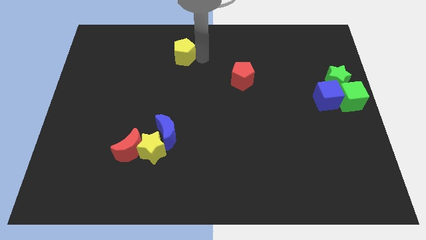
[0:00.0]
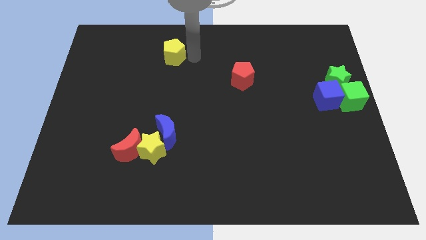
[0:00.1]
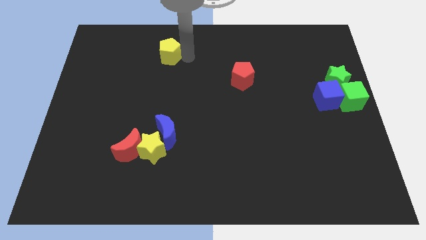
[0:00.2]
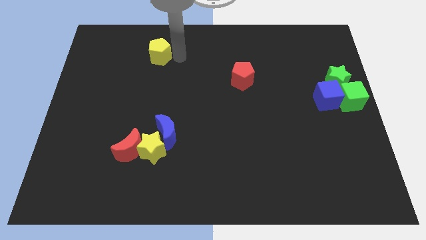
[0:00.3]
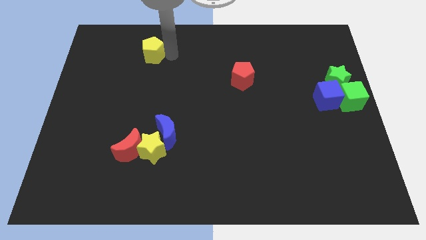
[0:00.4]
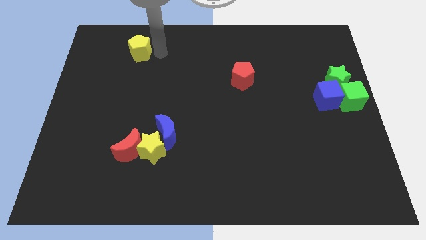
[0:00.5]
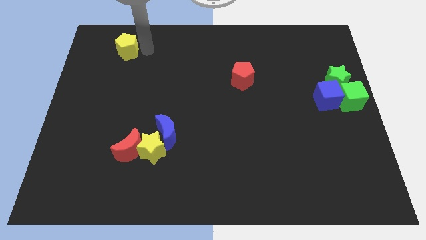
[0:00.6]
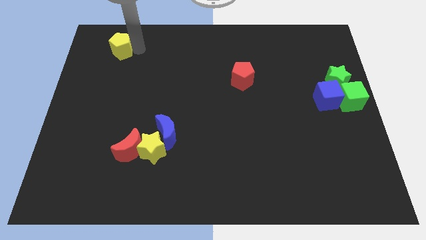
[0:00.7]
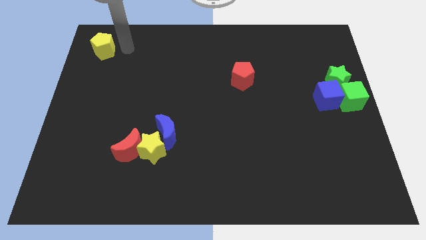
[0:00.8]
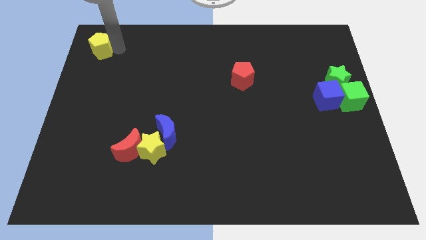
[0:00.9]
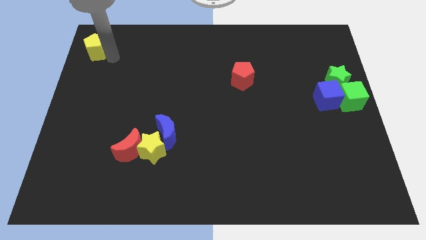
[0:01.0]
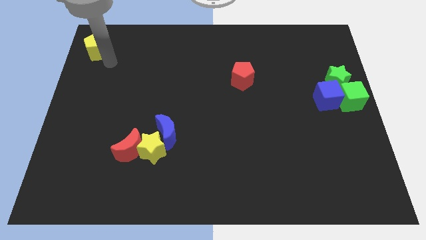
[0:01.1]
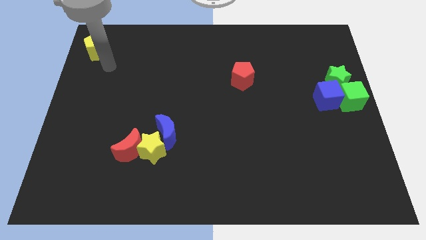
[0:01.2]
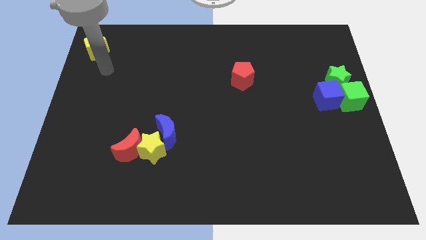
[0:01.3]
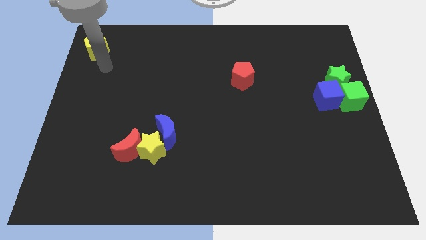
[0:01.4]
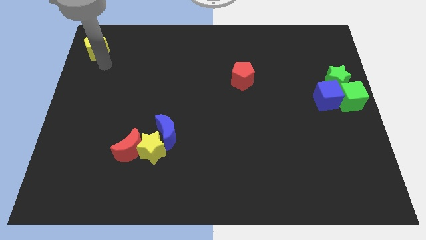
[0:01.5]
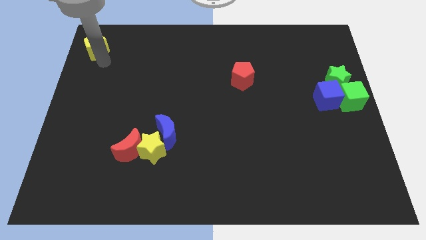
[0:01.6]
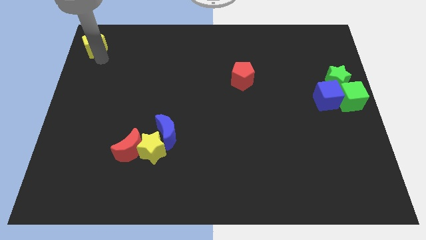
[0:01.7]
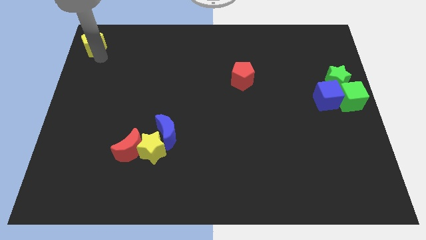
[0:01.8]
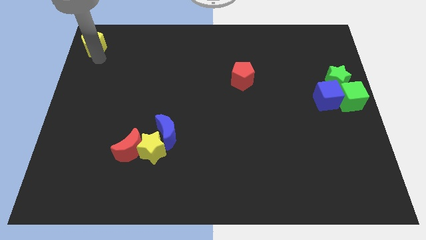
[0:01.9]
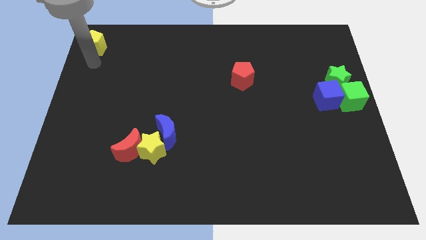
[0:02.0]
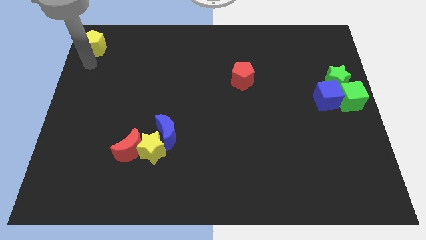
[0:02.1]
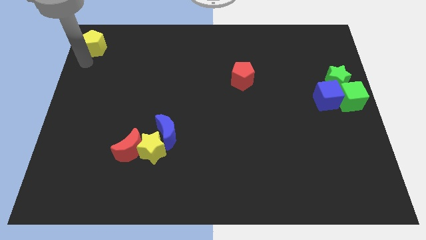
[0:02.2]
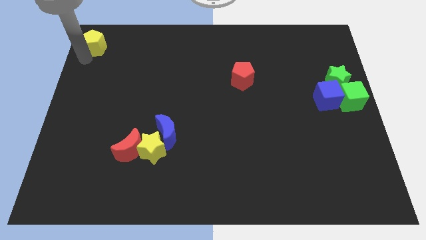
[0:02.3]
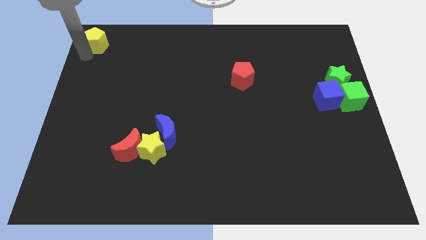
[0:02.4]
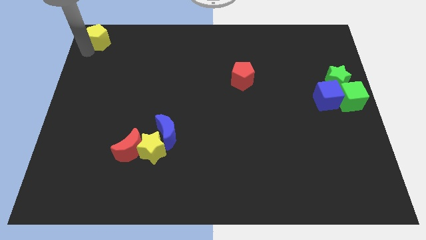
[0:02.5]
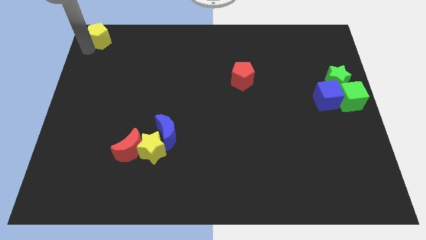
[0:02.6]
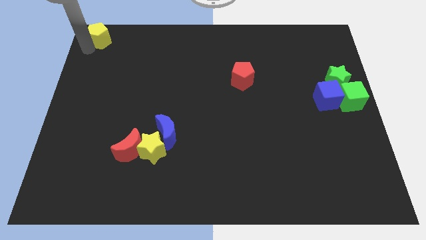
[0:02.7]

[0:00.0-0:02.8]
move the yellow pentagon to the top left corner of the board

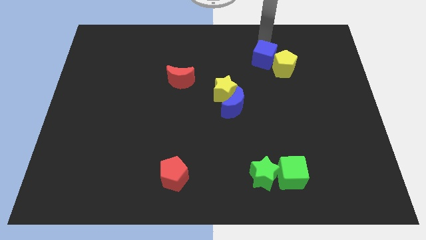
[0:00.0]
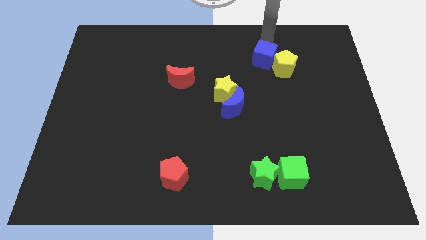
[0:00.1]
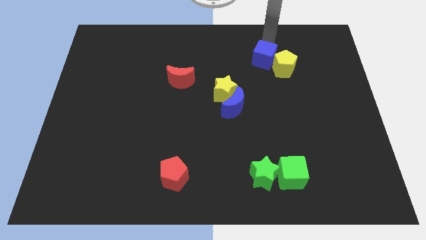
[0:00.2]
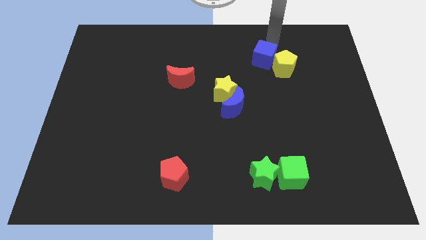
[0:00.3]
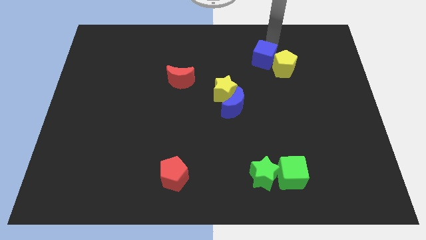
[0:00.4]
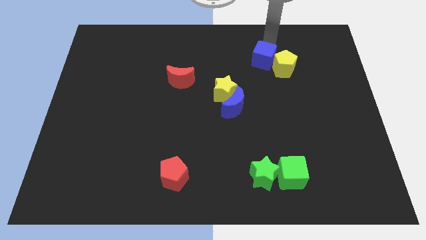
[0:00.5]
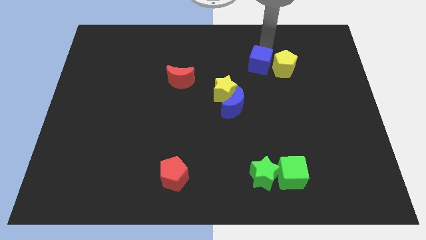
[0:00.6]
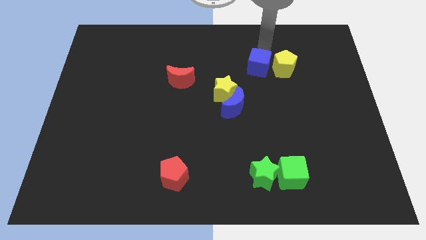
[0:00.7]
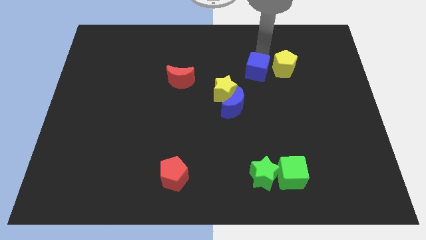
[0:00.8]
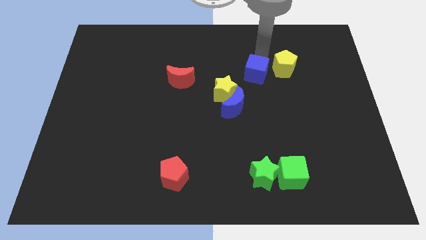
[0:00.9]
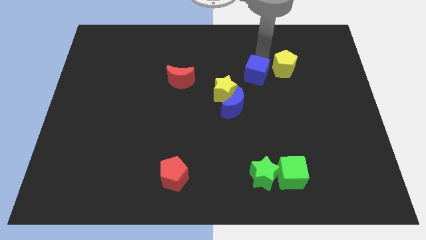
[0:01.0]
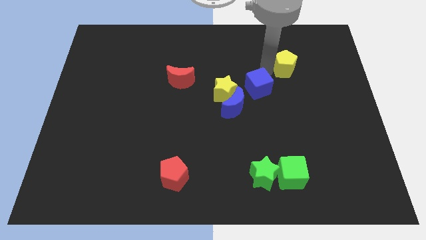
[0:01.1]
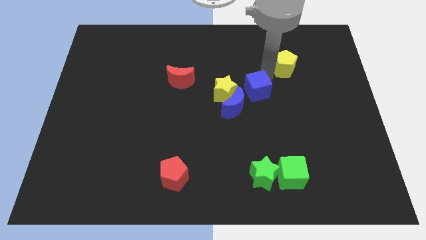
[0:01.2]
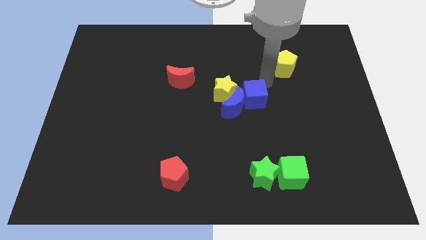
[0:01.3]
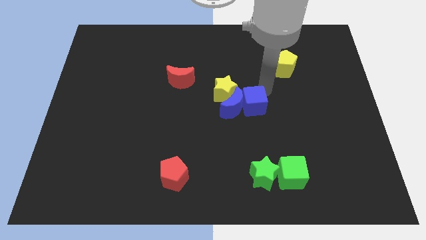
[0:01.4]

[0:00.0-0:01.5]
place the blue cube at the top right to the blue crescent

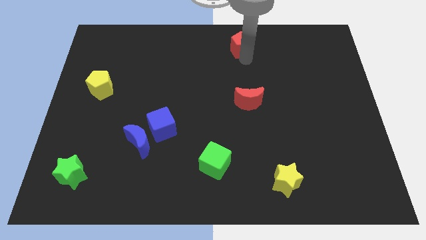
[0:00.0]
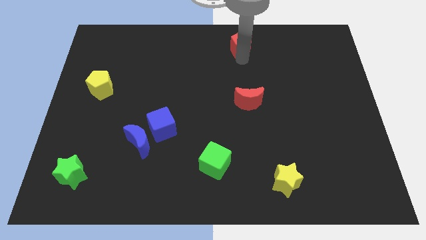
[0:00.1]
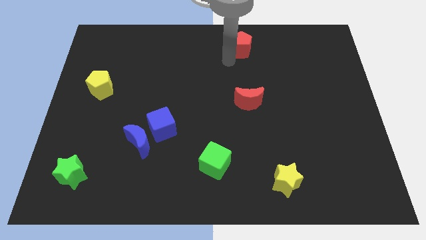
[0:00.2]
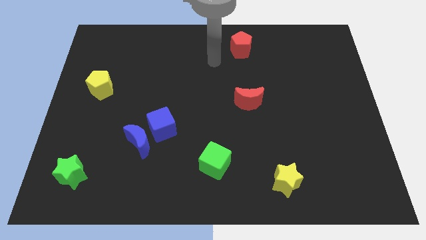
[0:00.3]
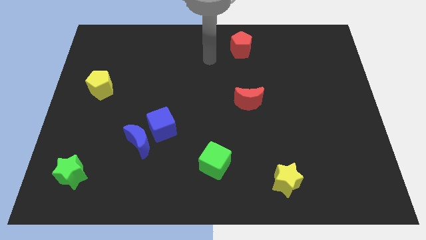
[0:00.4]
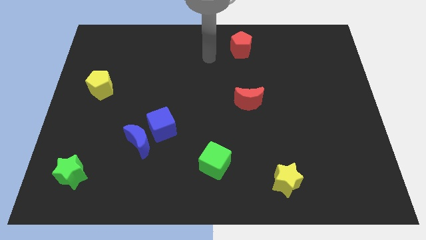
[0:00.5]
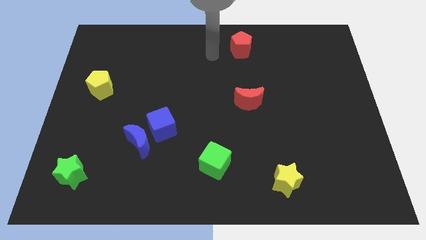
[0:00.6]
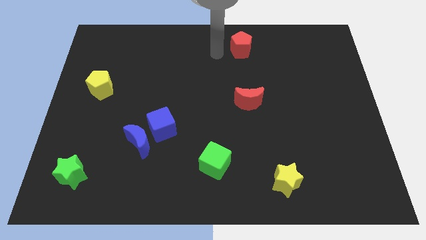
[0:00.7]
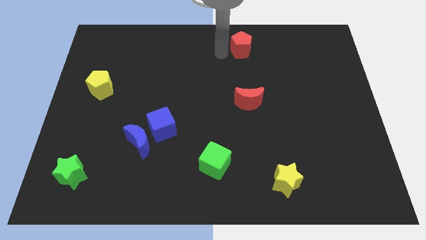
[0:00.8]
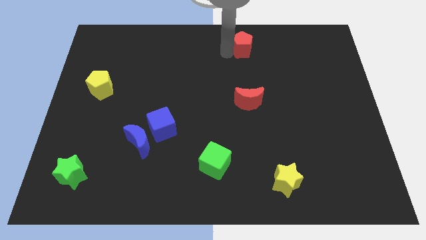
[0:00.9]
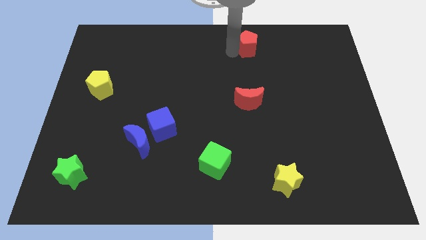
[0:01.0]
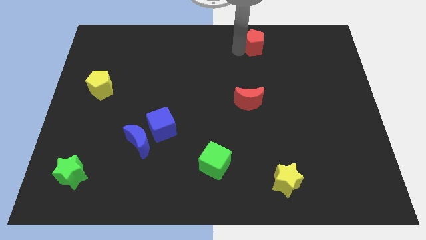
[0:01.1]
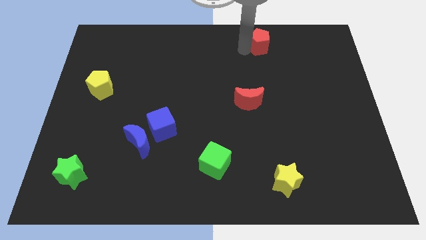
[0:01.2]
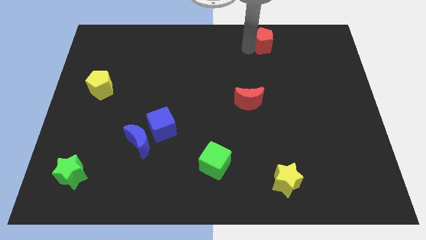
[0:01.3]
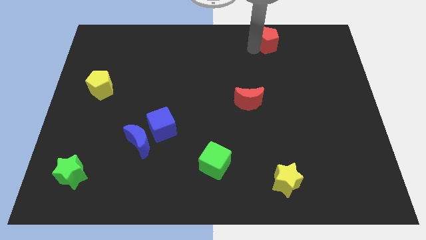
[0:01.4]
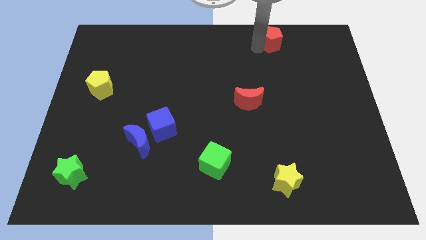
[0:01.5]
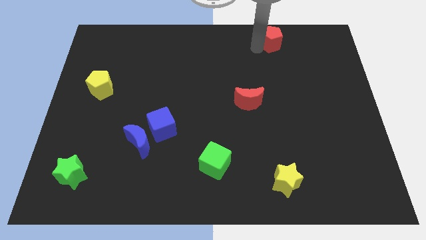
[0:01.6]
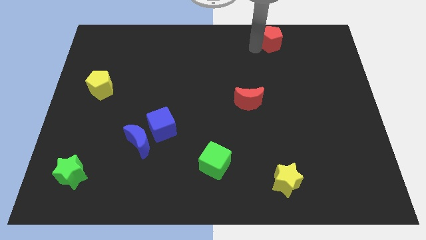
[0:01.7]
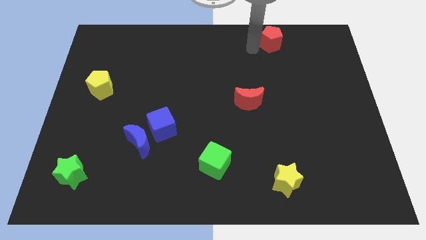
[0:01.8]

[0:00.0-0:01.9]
push the red pentagon slightly to the right

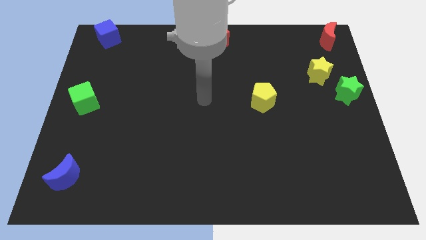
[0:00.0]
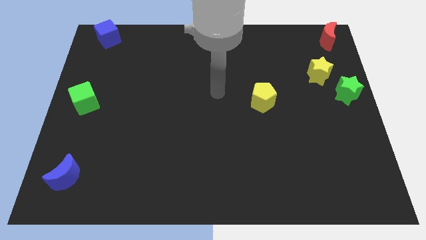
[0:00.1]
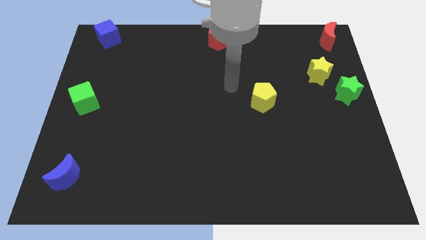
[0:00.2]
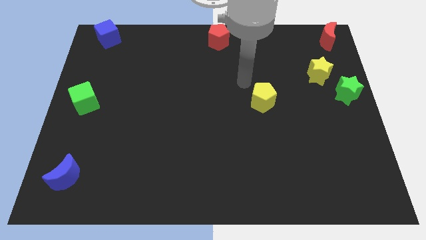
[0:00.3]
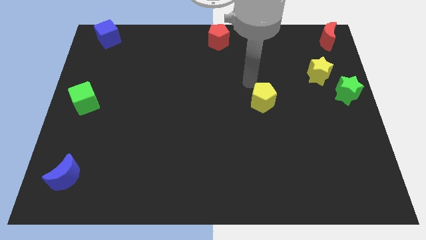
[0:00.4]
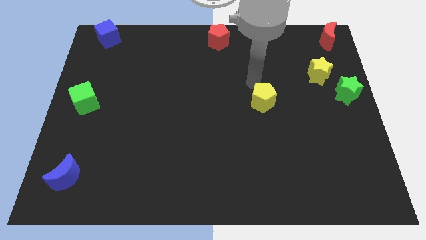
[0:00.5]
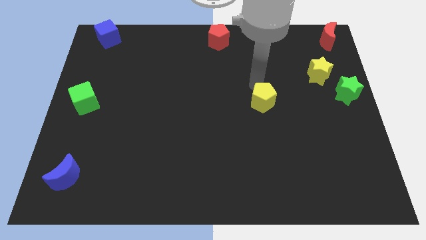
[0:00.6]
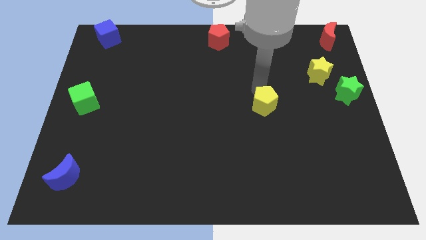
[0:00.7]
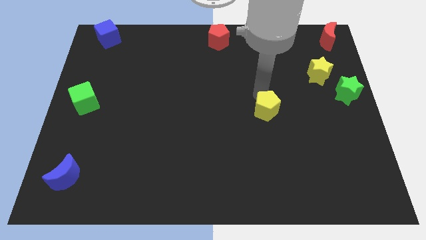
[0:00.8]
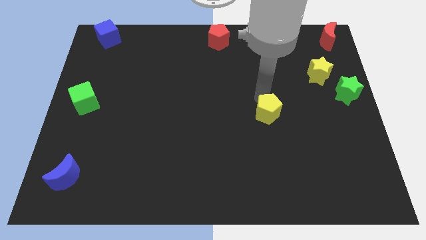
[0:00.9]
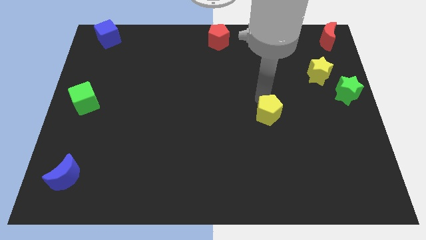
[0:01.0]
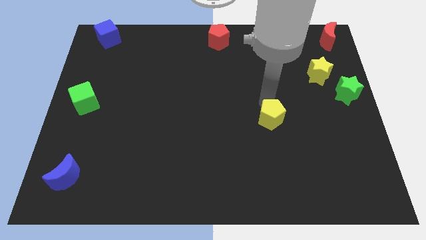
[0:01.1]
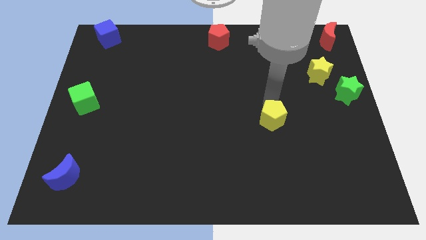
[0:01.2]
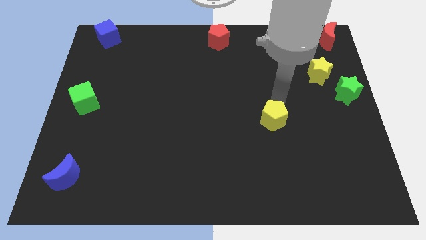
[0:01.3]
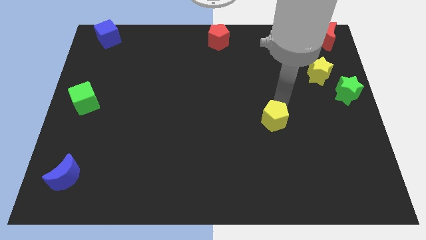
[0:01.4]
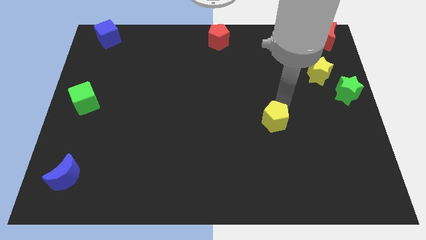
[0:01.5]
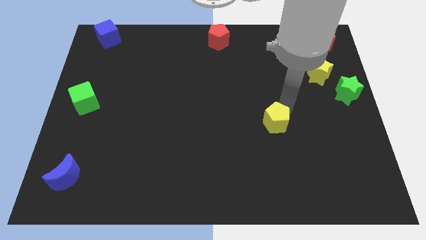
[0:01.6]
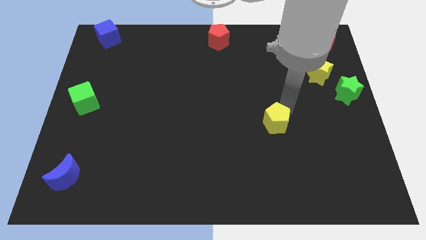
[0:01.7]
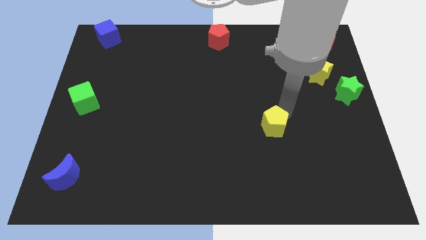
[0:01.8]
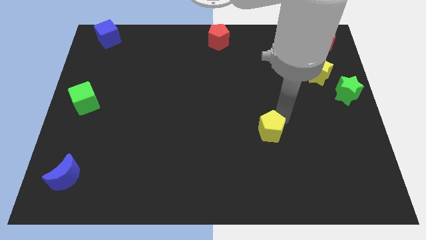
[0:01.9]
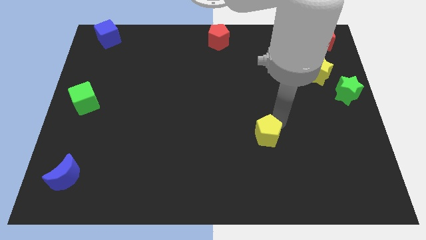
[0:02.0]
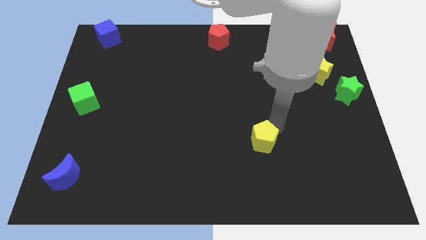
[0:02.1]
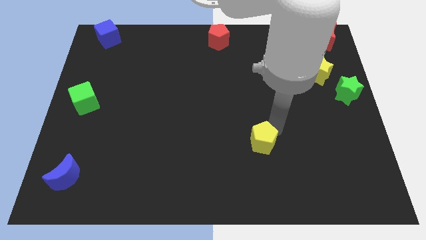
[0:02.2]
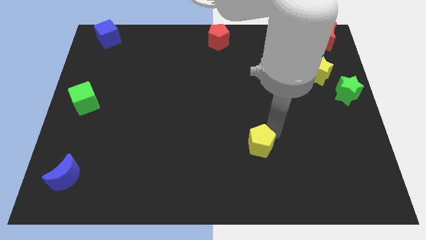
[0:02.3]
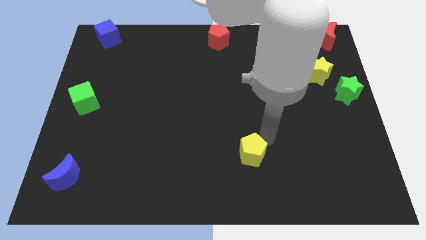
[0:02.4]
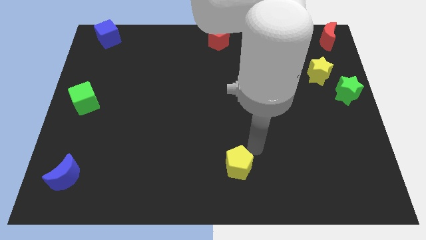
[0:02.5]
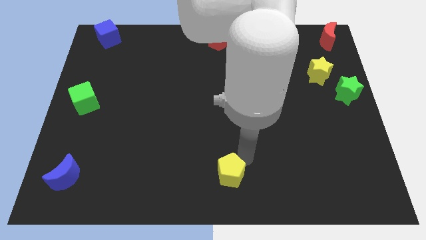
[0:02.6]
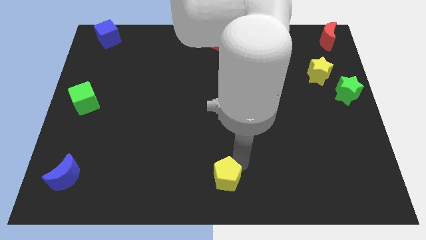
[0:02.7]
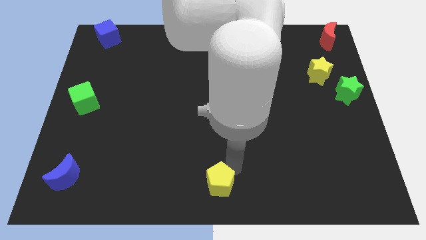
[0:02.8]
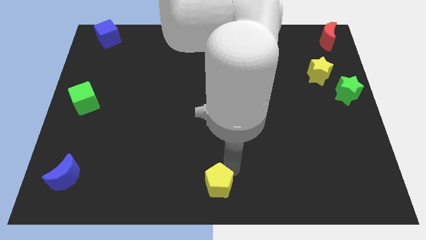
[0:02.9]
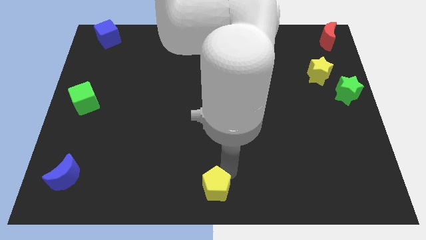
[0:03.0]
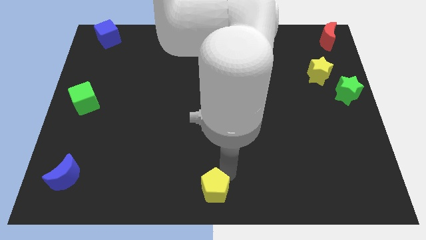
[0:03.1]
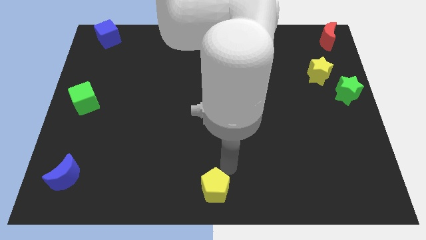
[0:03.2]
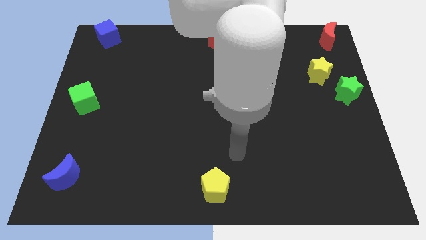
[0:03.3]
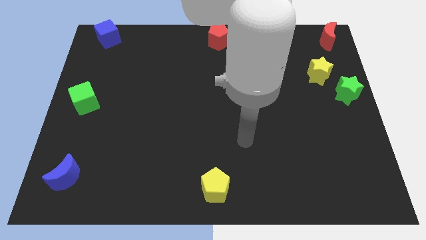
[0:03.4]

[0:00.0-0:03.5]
push the yellow pentagon to the bottom center
